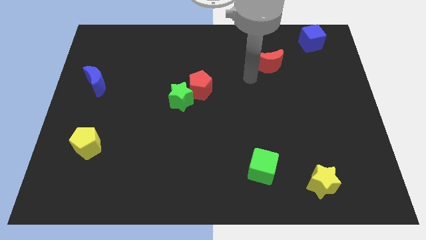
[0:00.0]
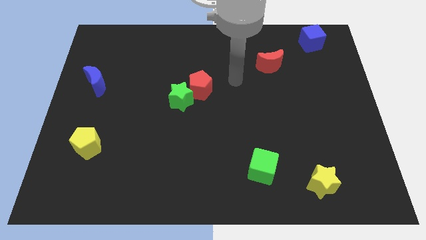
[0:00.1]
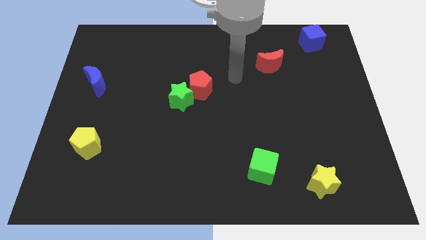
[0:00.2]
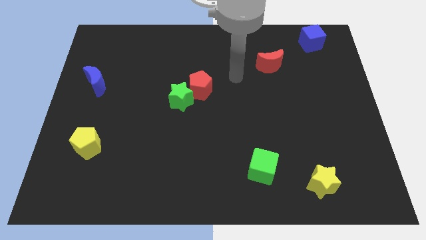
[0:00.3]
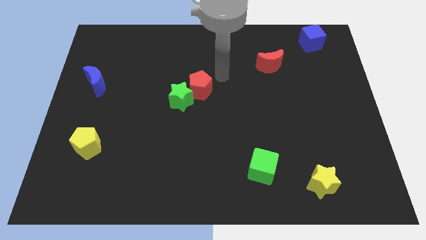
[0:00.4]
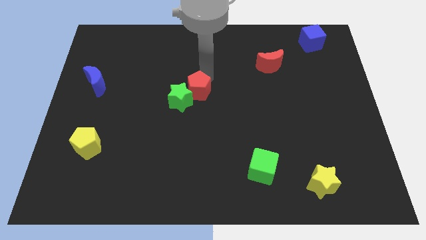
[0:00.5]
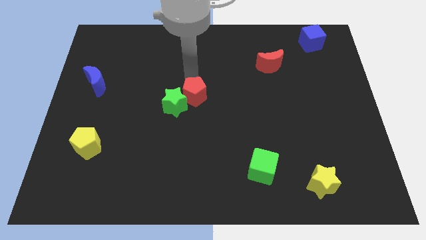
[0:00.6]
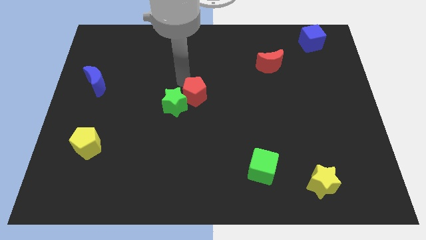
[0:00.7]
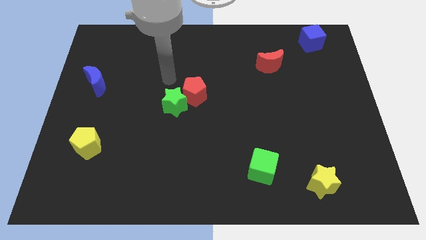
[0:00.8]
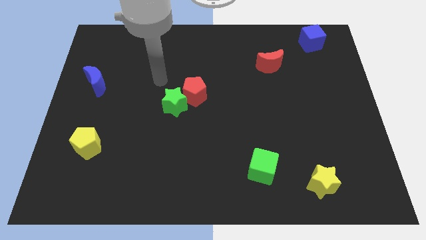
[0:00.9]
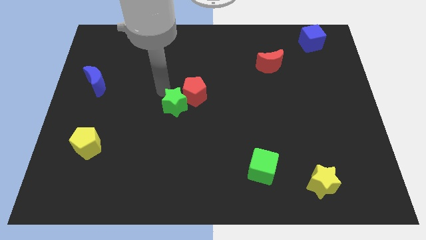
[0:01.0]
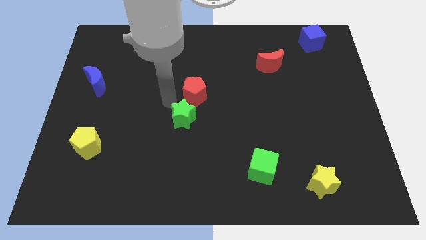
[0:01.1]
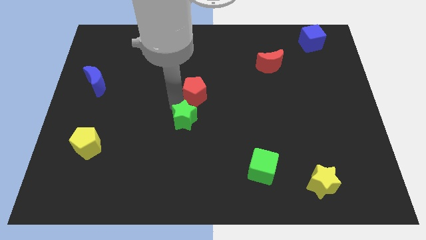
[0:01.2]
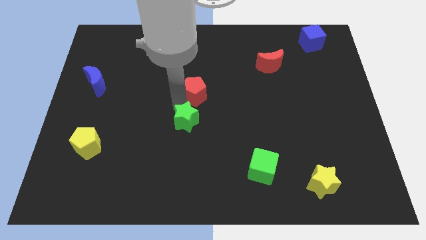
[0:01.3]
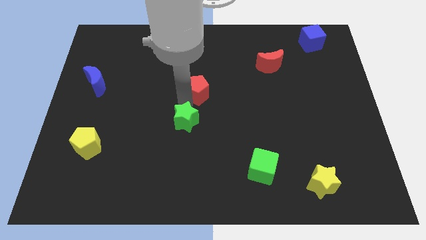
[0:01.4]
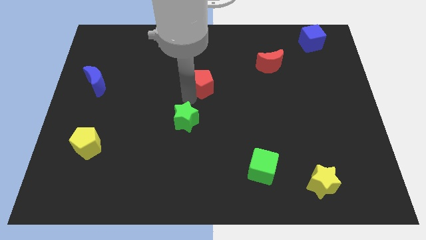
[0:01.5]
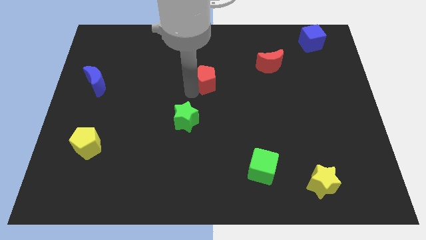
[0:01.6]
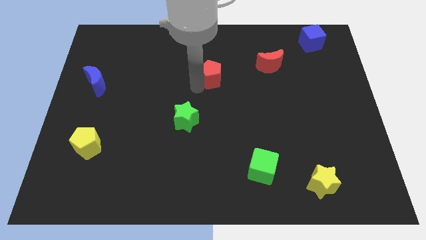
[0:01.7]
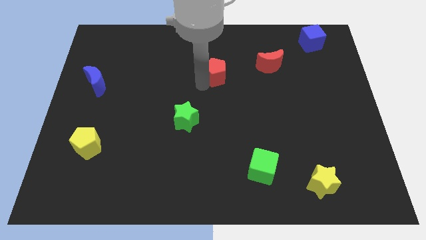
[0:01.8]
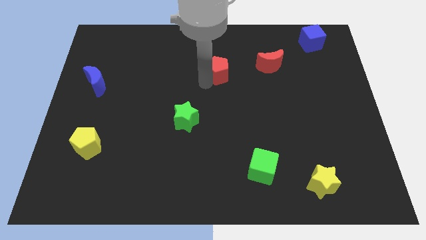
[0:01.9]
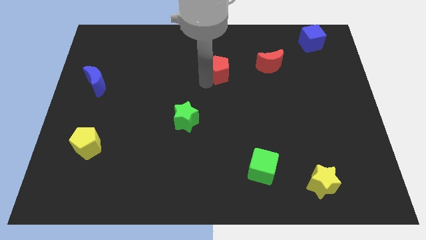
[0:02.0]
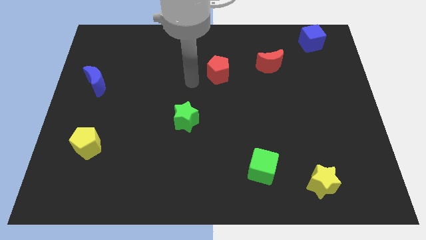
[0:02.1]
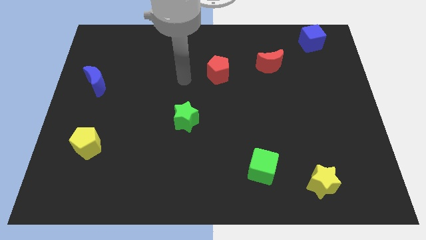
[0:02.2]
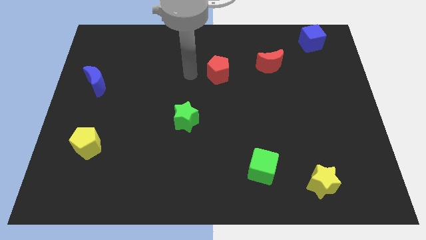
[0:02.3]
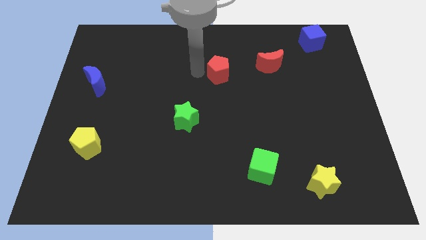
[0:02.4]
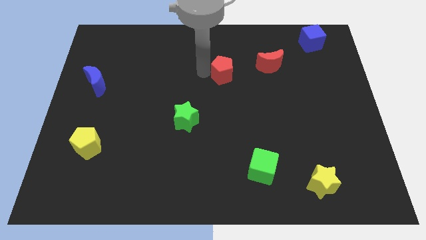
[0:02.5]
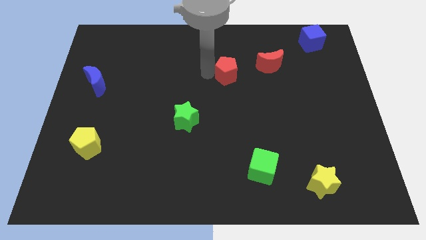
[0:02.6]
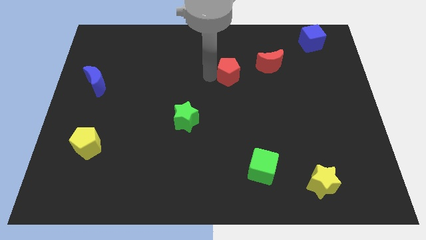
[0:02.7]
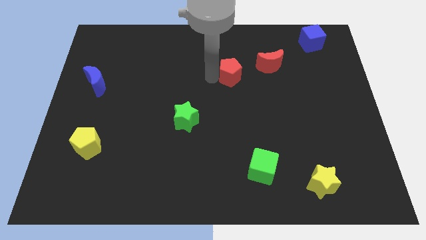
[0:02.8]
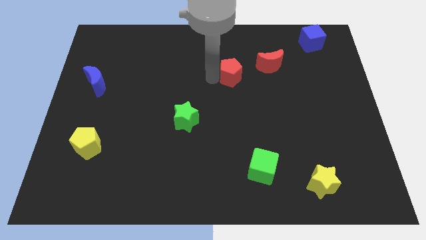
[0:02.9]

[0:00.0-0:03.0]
separate the red pentagon and the green star

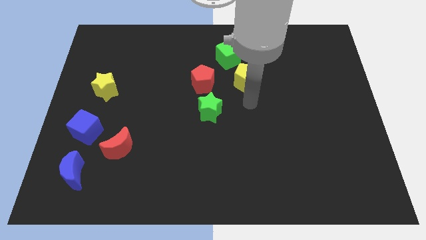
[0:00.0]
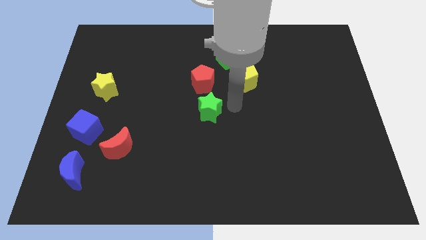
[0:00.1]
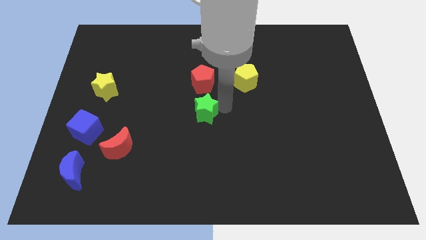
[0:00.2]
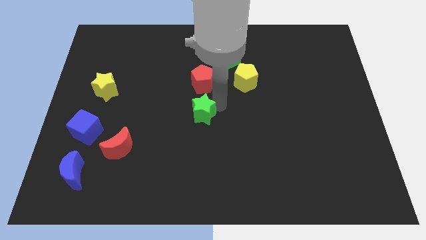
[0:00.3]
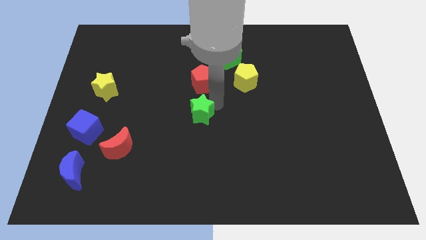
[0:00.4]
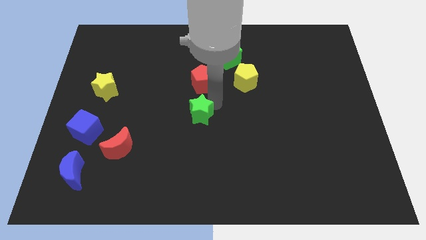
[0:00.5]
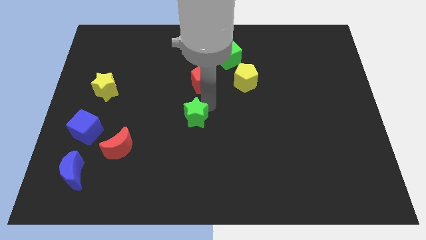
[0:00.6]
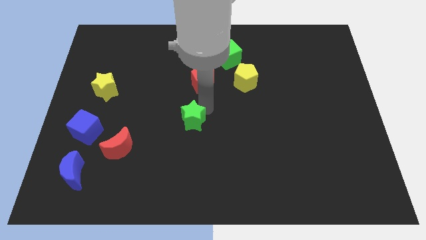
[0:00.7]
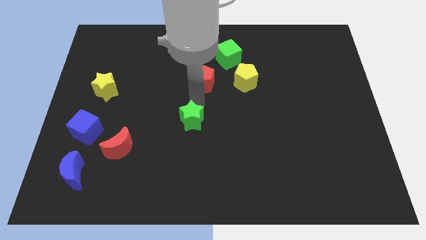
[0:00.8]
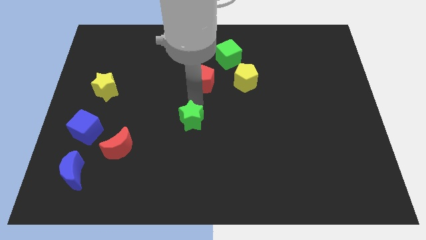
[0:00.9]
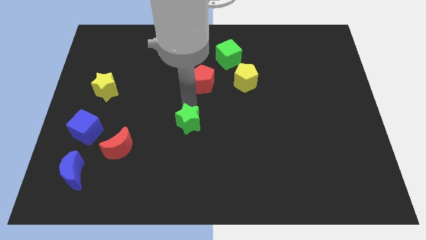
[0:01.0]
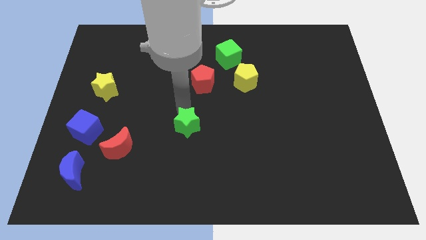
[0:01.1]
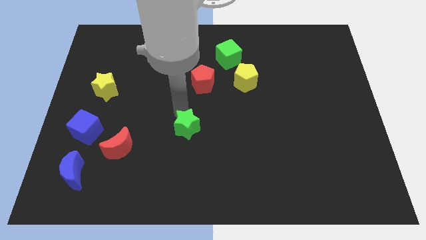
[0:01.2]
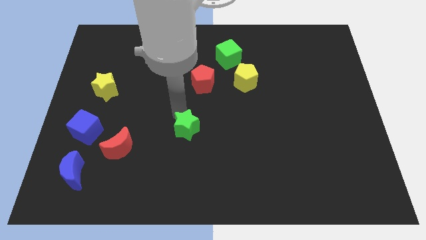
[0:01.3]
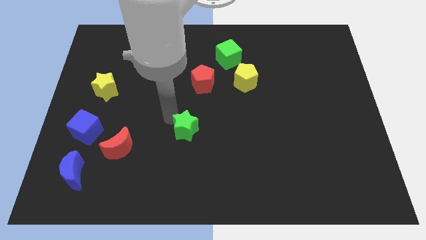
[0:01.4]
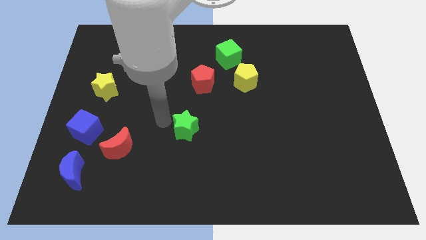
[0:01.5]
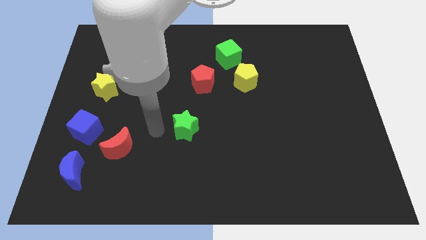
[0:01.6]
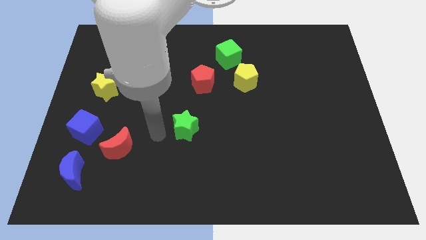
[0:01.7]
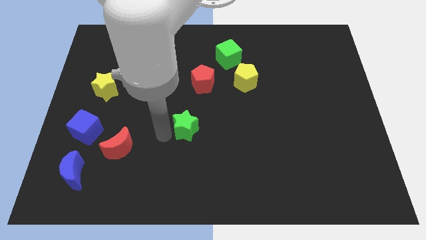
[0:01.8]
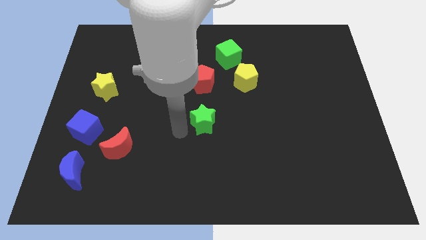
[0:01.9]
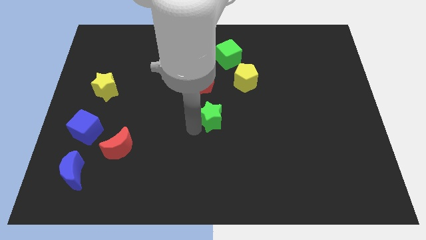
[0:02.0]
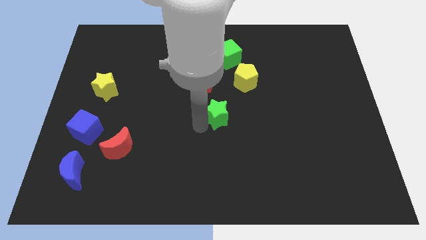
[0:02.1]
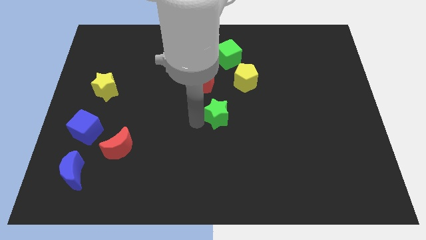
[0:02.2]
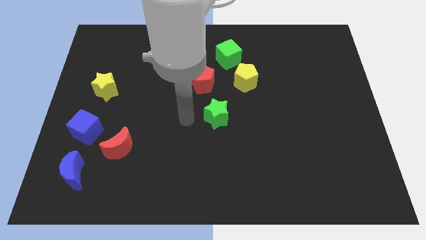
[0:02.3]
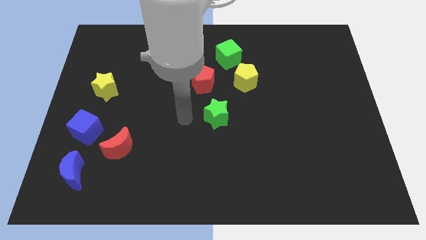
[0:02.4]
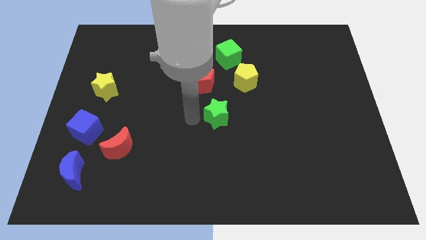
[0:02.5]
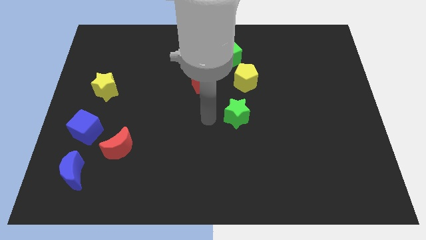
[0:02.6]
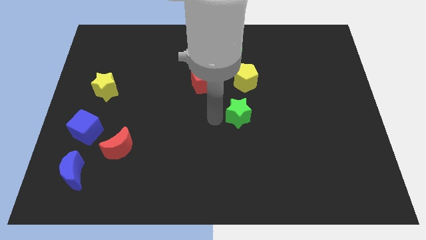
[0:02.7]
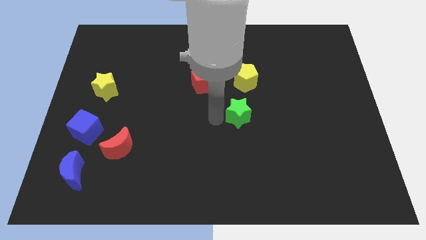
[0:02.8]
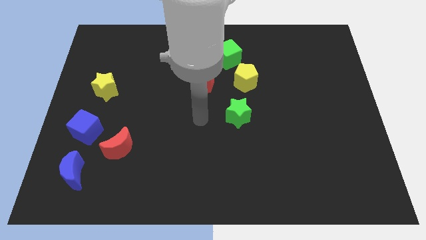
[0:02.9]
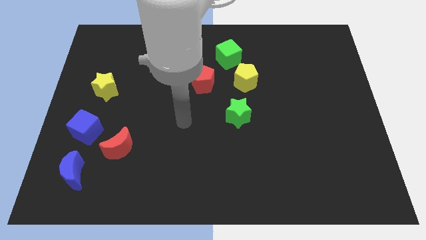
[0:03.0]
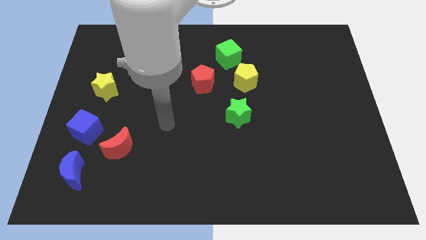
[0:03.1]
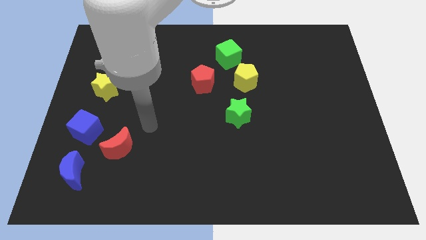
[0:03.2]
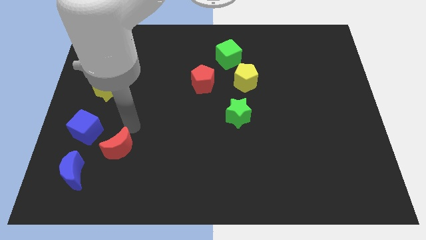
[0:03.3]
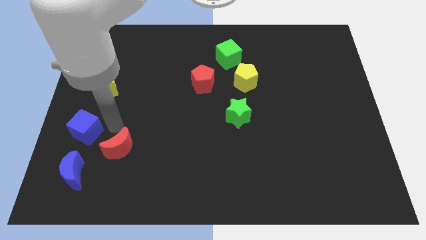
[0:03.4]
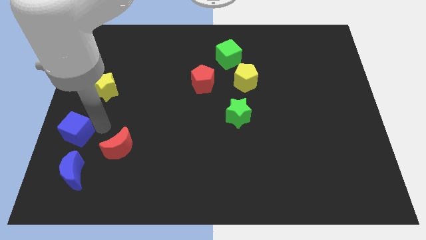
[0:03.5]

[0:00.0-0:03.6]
place the green star to the bottom of the yellow pentagon

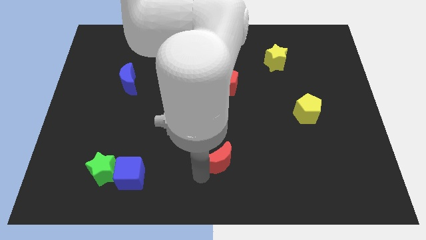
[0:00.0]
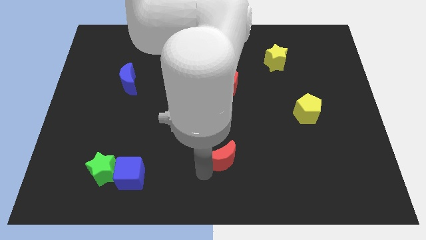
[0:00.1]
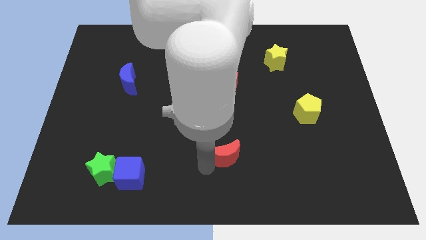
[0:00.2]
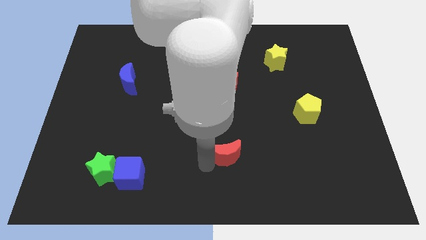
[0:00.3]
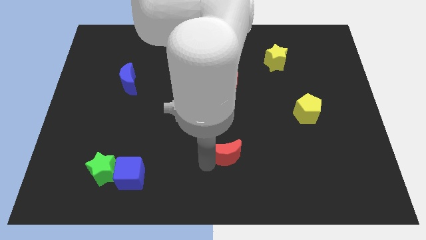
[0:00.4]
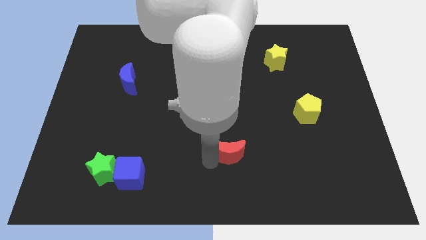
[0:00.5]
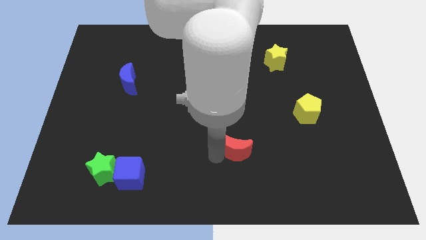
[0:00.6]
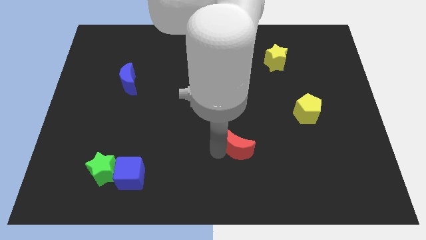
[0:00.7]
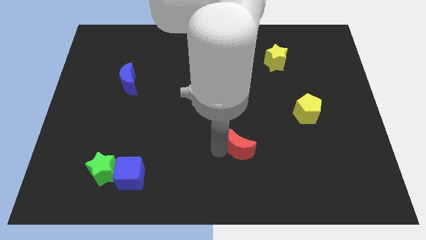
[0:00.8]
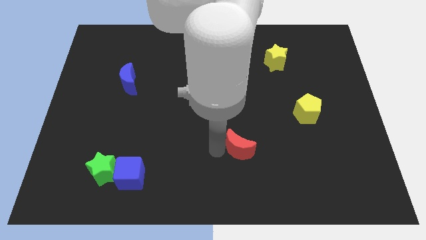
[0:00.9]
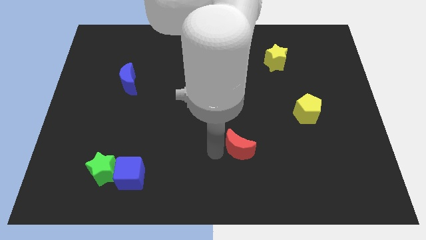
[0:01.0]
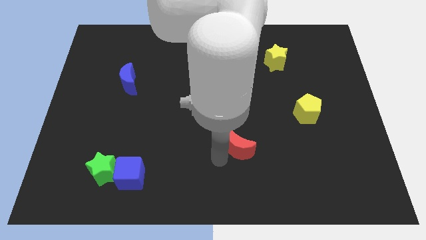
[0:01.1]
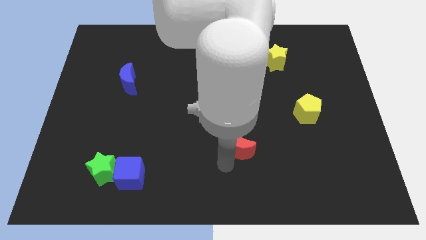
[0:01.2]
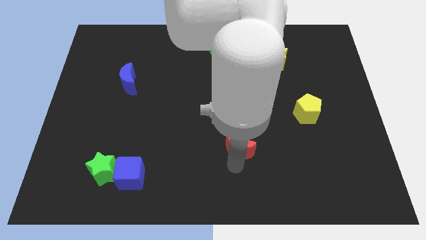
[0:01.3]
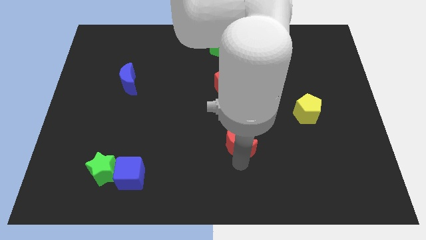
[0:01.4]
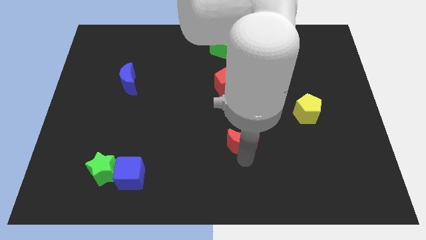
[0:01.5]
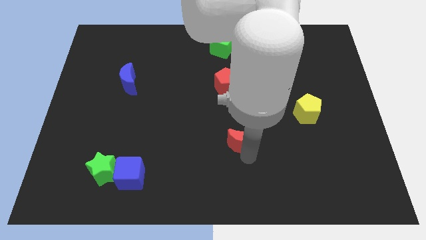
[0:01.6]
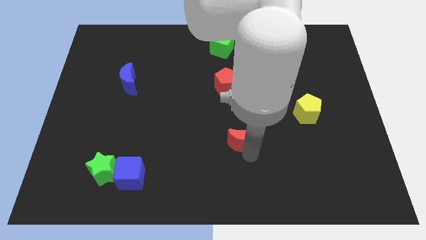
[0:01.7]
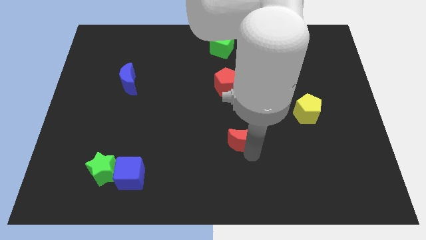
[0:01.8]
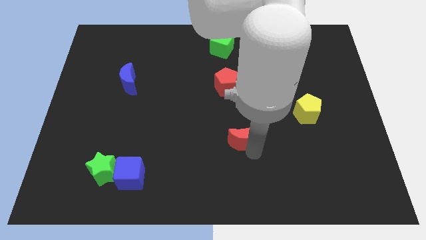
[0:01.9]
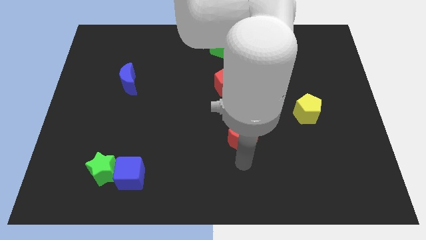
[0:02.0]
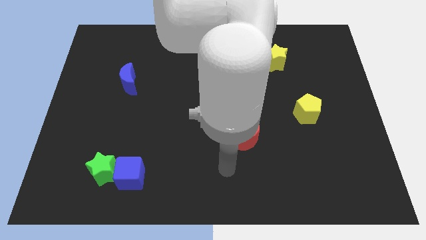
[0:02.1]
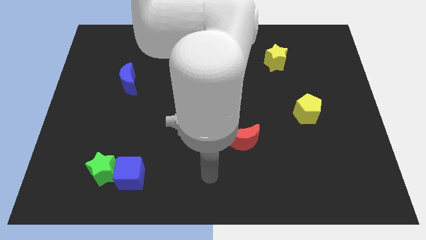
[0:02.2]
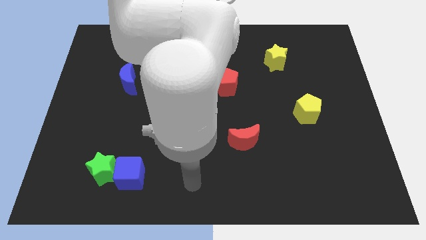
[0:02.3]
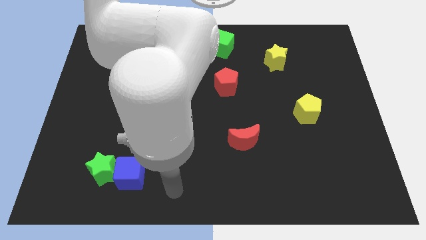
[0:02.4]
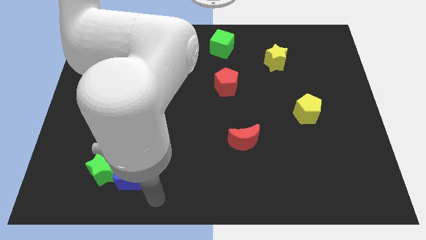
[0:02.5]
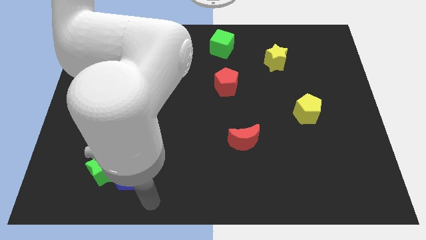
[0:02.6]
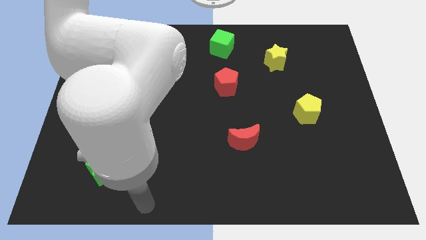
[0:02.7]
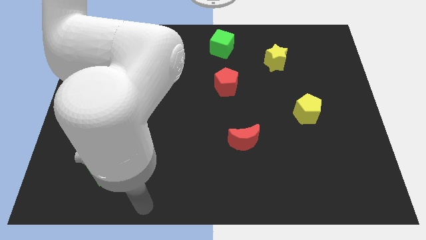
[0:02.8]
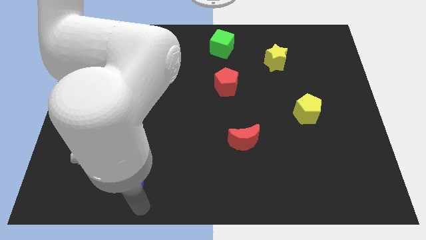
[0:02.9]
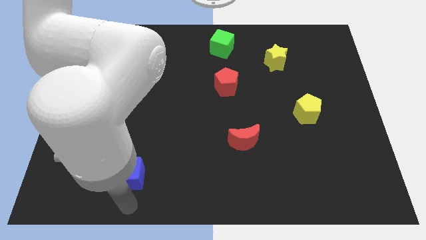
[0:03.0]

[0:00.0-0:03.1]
move red moon vertically below red pentagon
